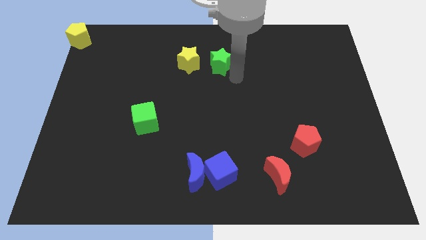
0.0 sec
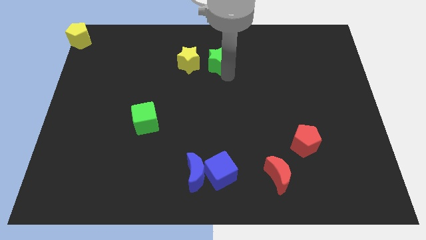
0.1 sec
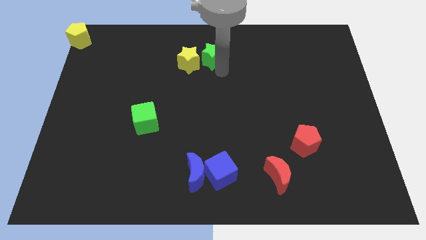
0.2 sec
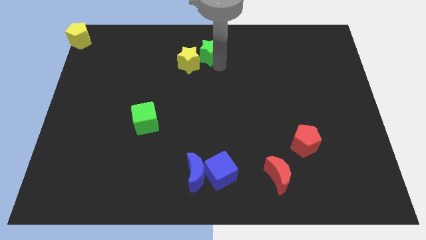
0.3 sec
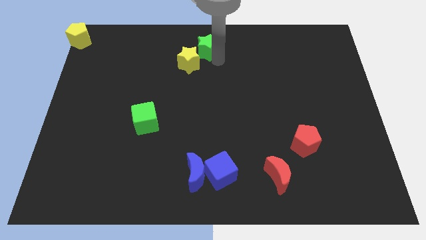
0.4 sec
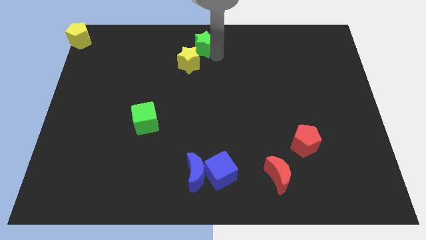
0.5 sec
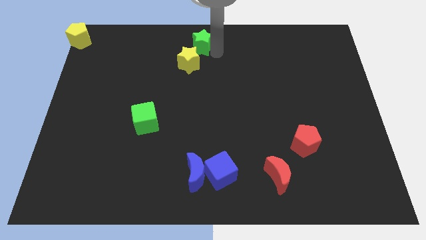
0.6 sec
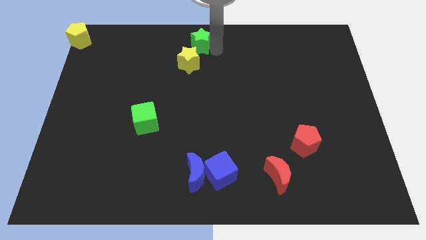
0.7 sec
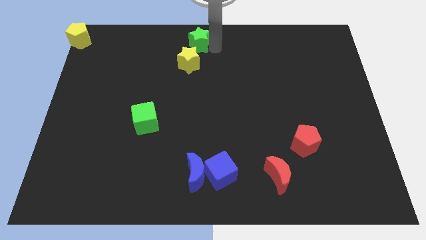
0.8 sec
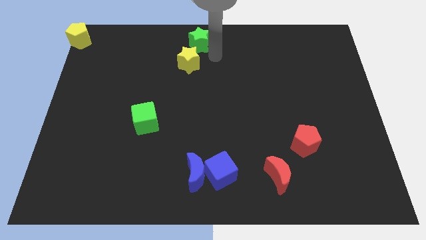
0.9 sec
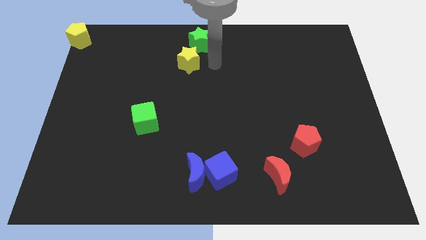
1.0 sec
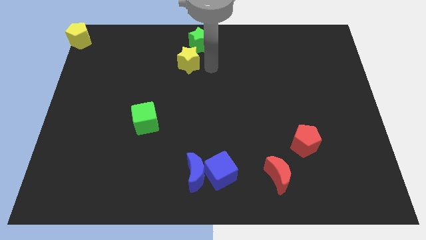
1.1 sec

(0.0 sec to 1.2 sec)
place the green star above the yellow star

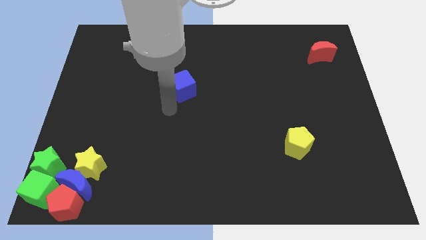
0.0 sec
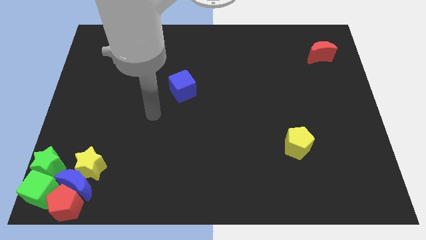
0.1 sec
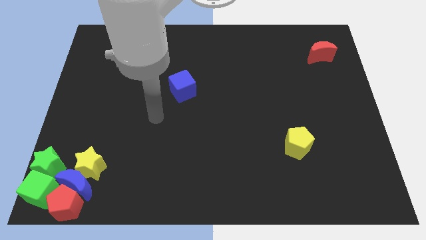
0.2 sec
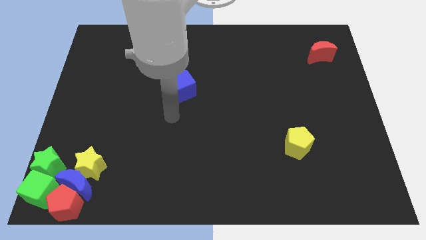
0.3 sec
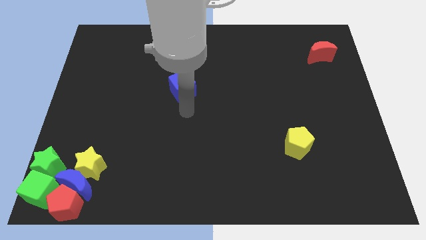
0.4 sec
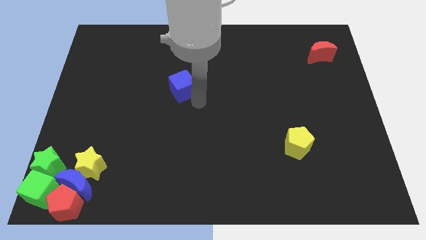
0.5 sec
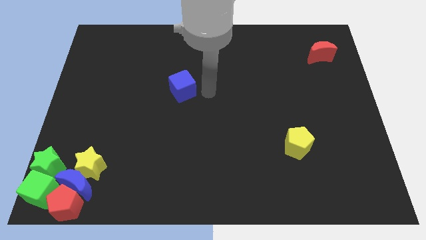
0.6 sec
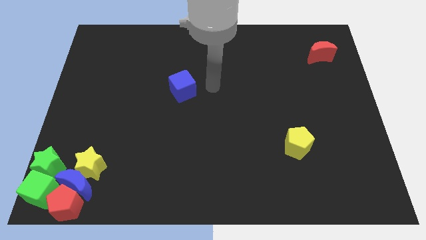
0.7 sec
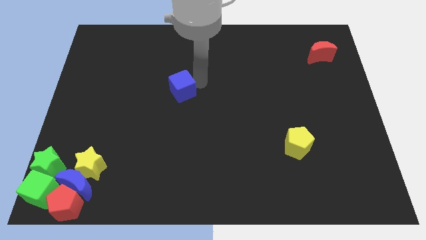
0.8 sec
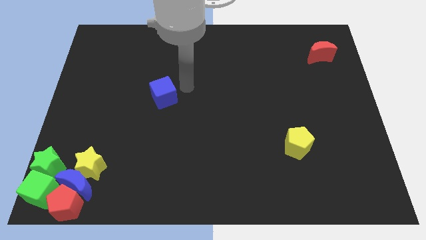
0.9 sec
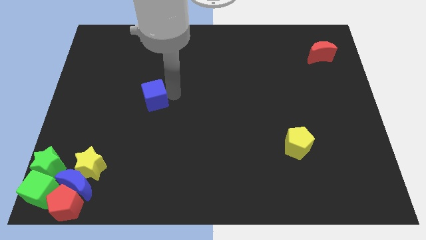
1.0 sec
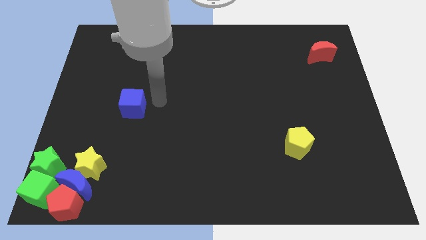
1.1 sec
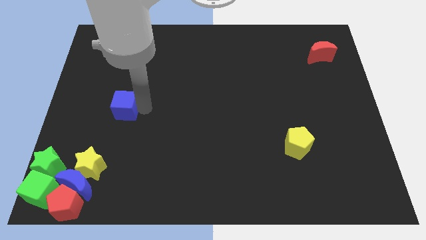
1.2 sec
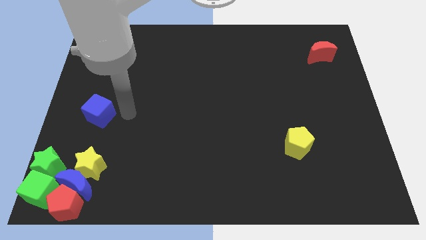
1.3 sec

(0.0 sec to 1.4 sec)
put the blue cube vertically above the yellow star

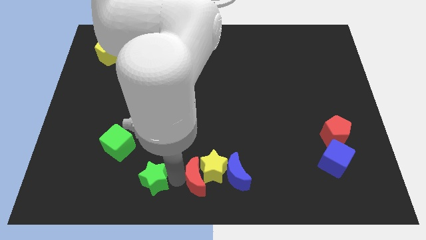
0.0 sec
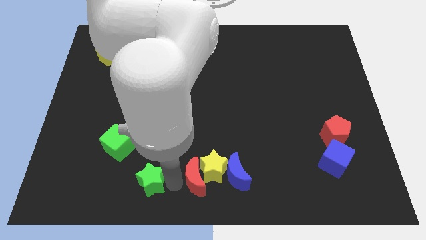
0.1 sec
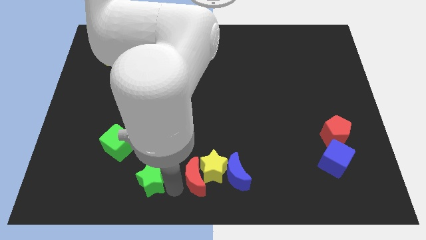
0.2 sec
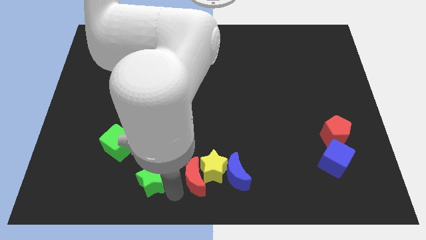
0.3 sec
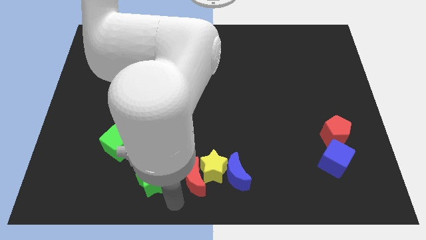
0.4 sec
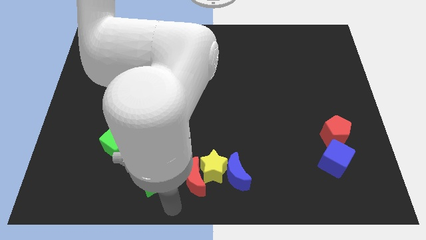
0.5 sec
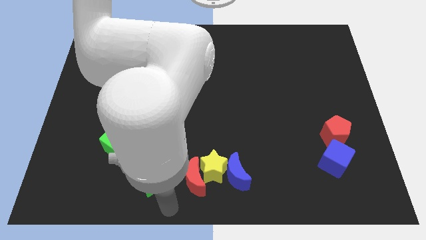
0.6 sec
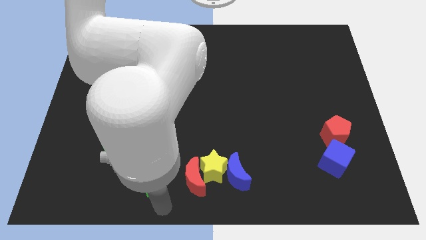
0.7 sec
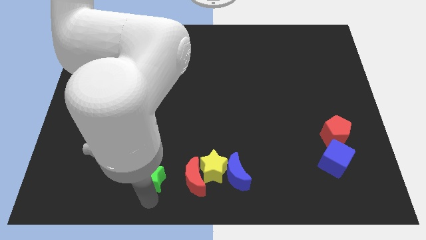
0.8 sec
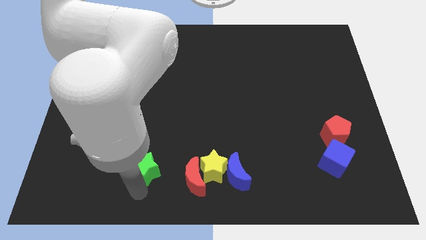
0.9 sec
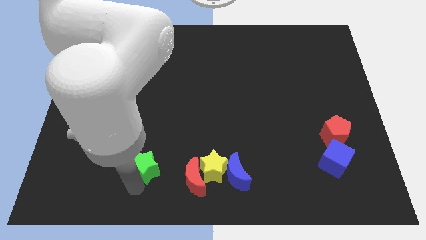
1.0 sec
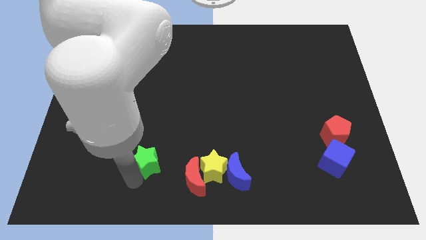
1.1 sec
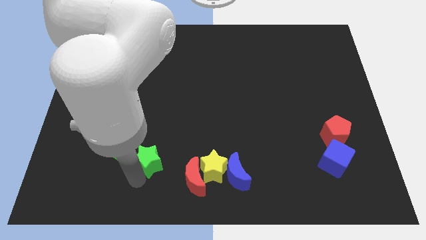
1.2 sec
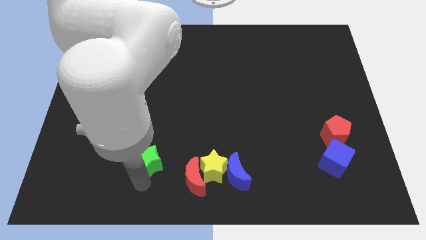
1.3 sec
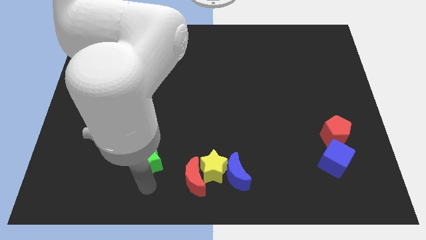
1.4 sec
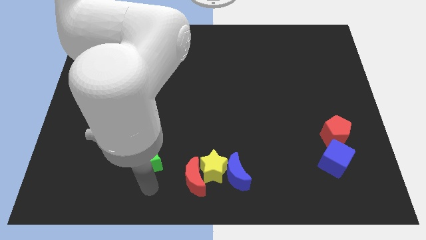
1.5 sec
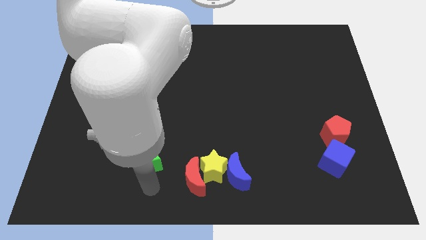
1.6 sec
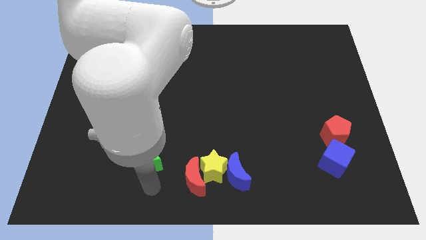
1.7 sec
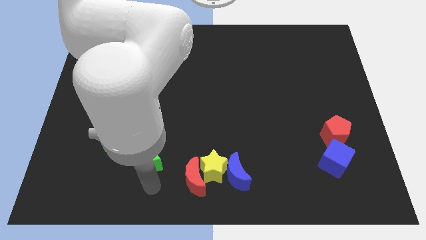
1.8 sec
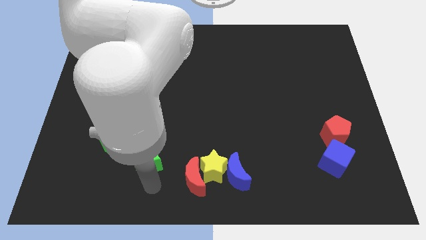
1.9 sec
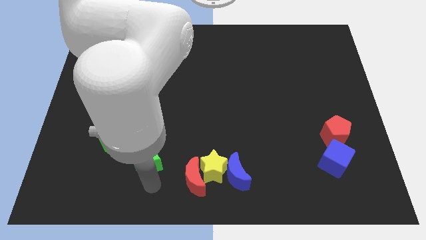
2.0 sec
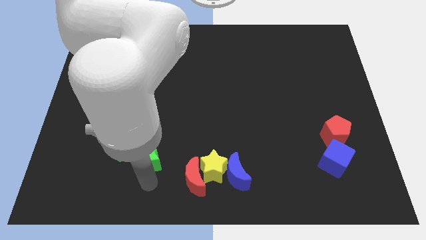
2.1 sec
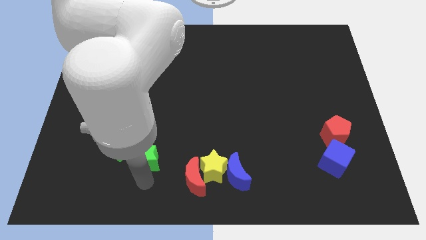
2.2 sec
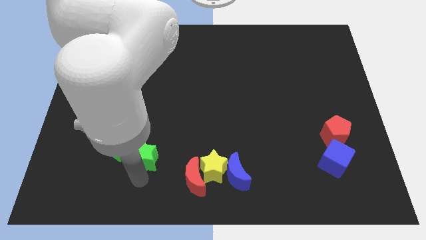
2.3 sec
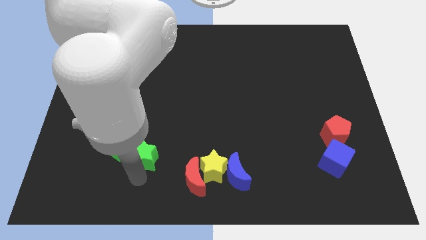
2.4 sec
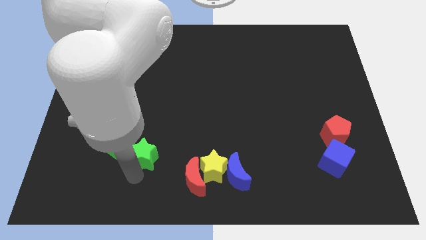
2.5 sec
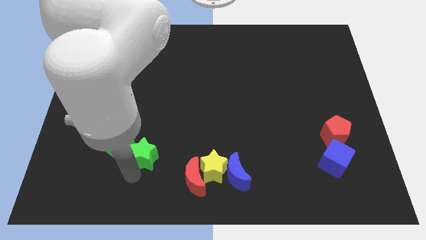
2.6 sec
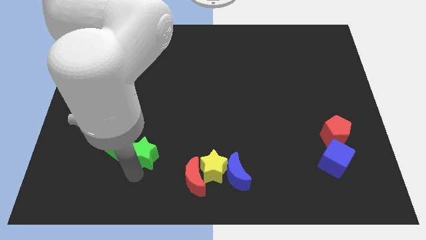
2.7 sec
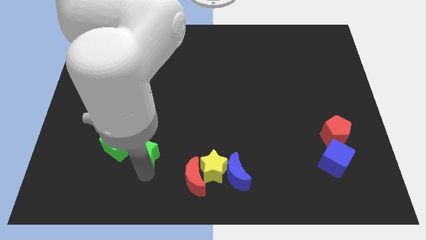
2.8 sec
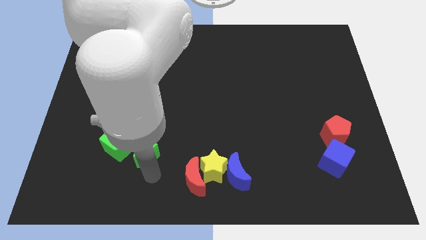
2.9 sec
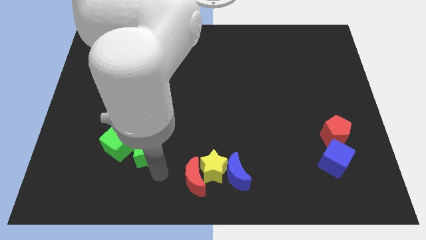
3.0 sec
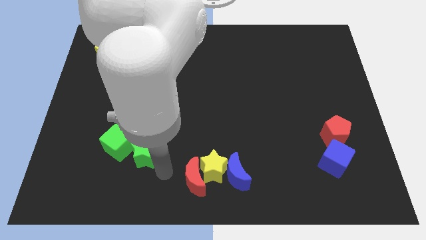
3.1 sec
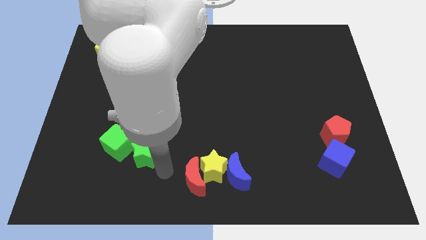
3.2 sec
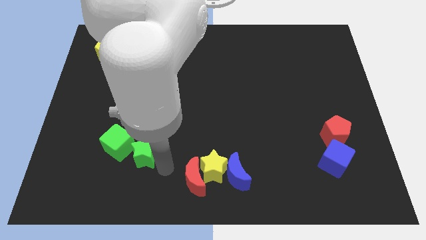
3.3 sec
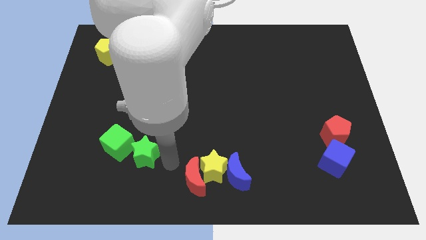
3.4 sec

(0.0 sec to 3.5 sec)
move the green star bottom right to the green cube

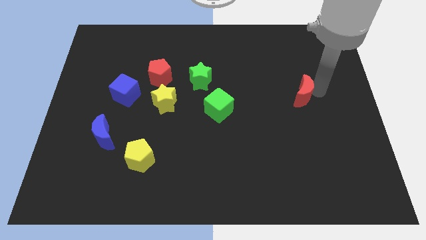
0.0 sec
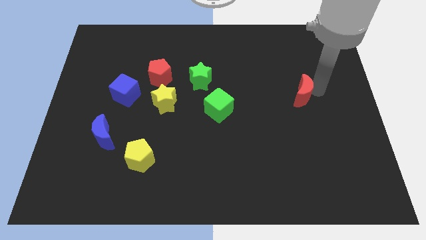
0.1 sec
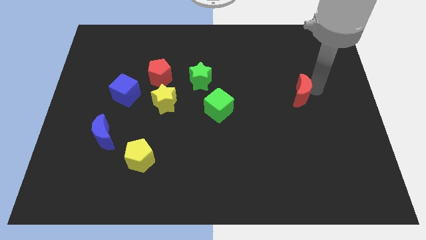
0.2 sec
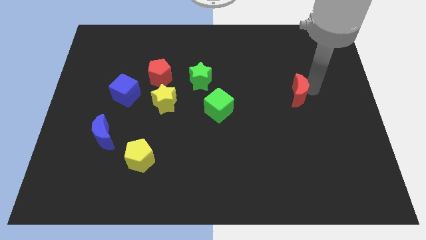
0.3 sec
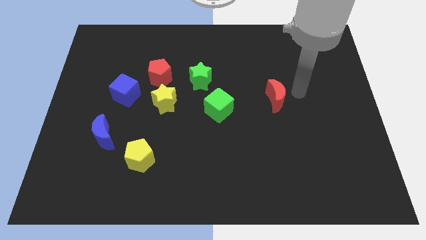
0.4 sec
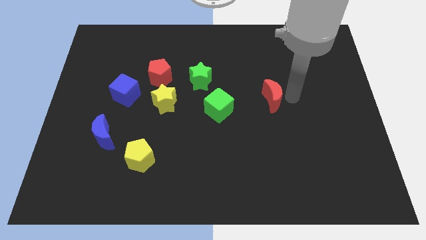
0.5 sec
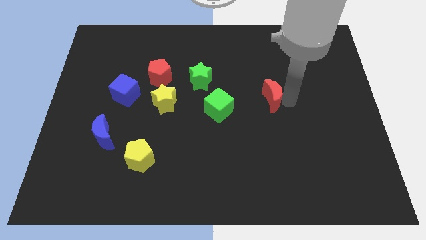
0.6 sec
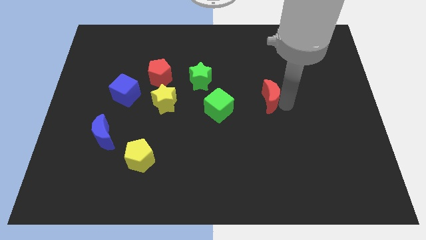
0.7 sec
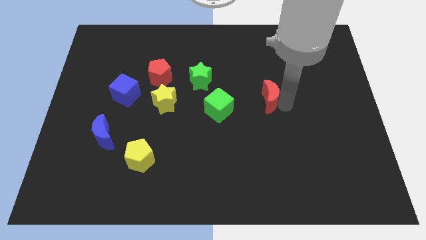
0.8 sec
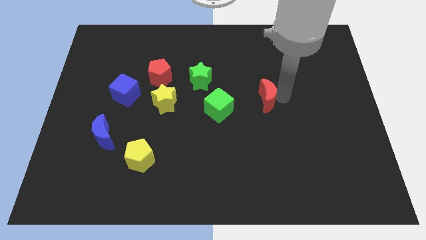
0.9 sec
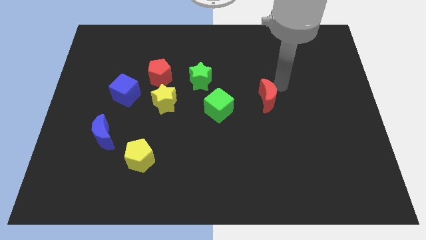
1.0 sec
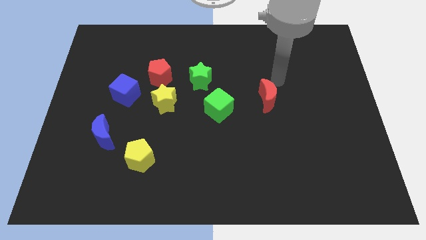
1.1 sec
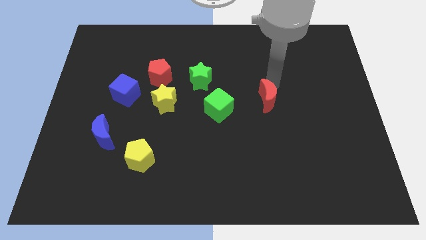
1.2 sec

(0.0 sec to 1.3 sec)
slide the red moon right to the green cube
